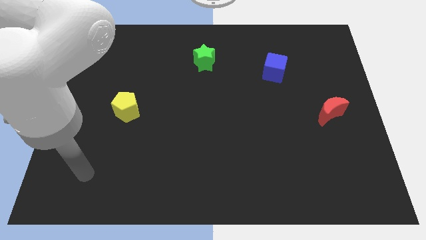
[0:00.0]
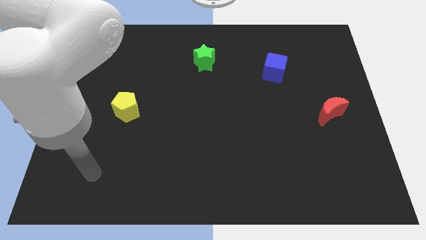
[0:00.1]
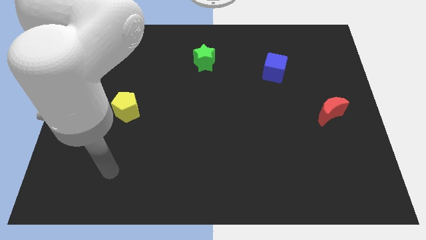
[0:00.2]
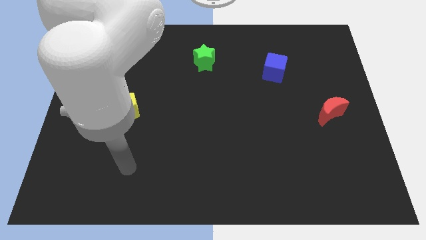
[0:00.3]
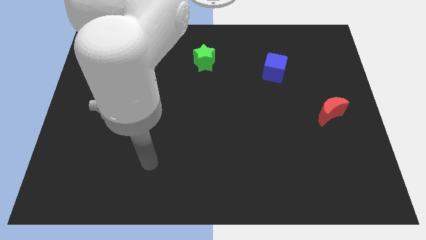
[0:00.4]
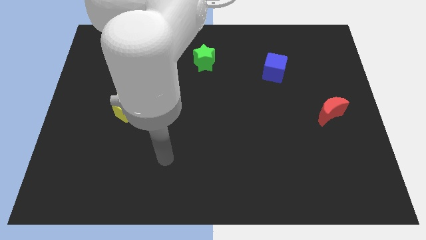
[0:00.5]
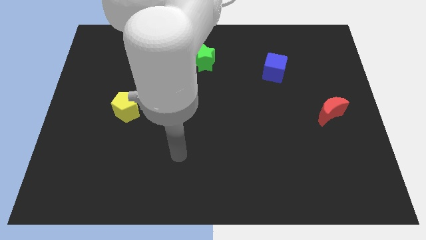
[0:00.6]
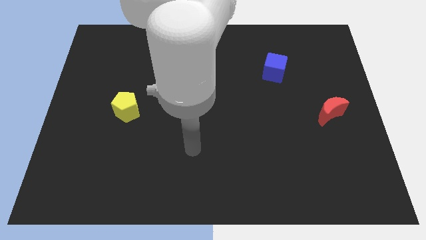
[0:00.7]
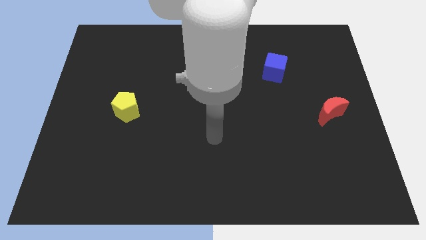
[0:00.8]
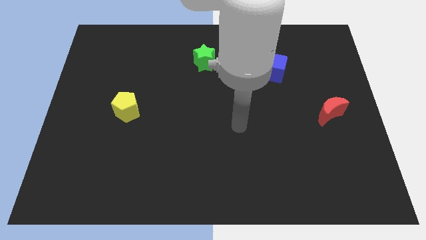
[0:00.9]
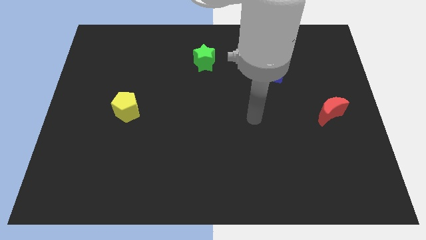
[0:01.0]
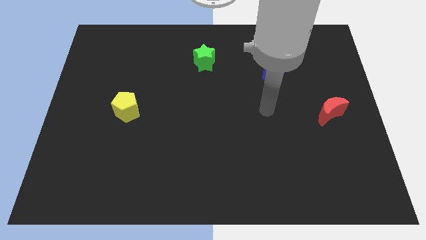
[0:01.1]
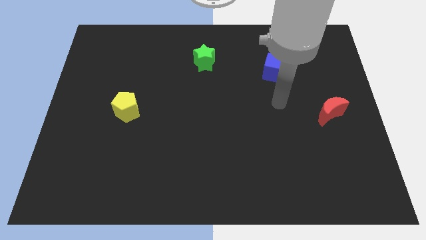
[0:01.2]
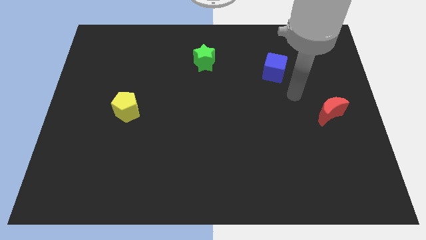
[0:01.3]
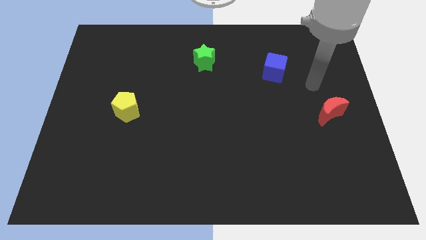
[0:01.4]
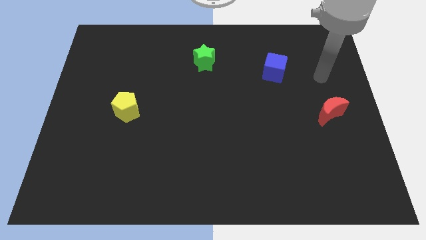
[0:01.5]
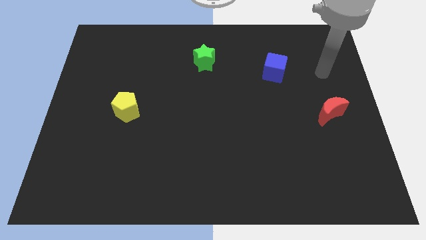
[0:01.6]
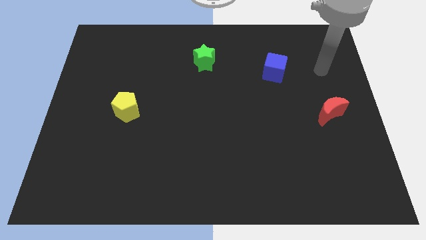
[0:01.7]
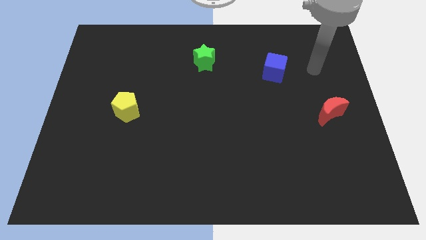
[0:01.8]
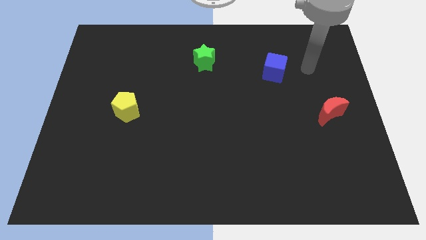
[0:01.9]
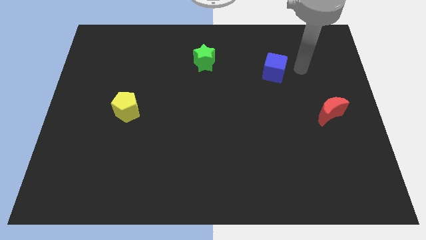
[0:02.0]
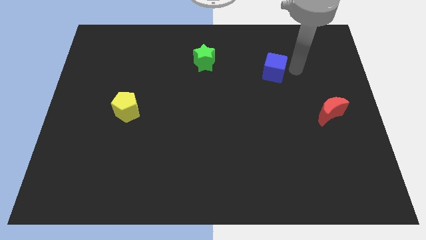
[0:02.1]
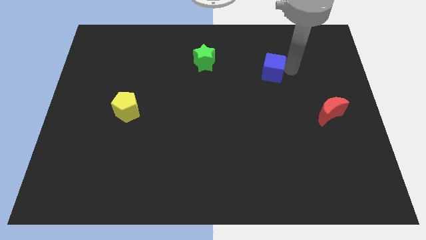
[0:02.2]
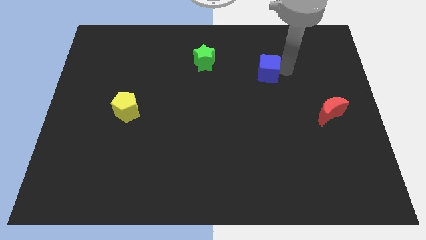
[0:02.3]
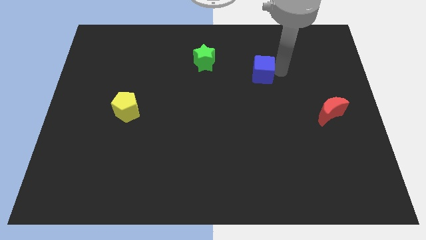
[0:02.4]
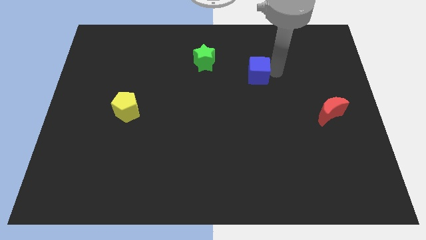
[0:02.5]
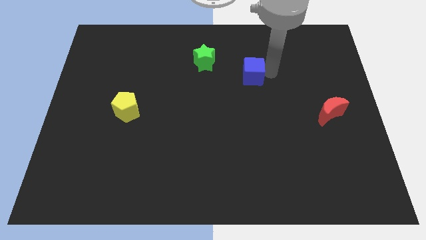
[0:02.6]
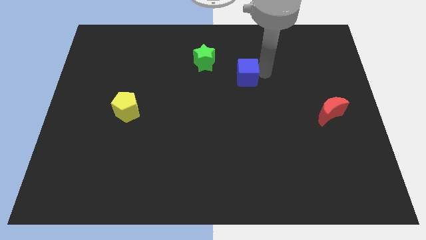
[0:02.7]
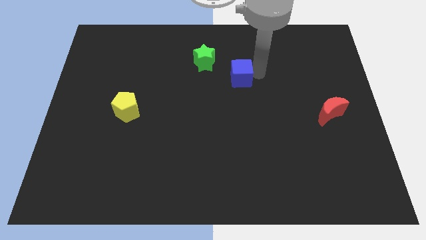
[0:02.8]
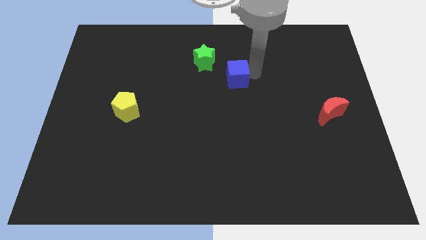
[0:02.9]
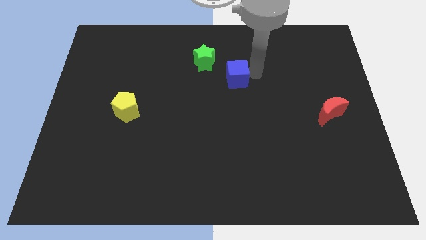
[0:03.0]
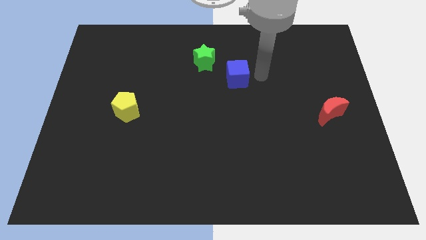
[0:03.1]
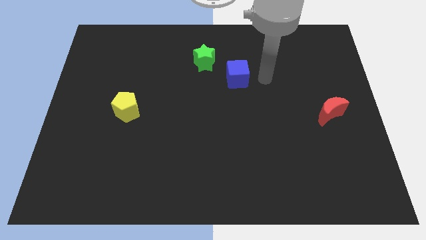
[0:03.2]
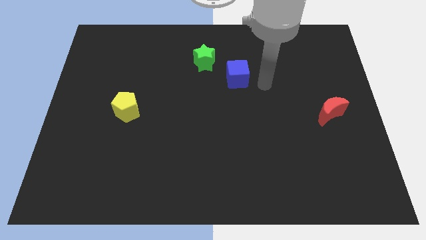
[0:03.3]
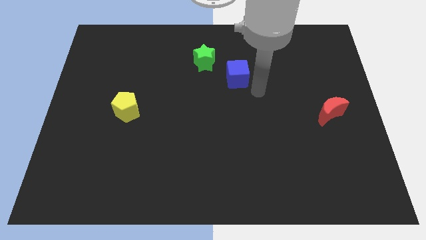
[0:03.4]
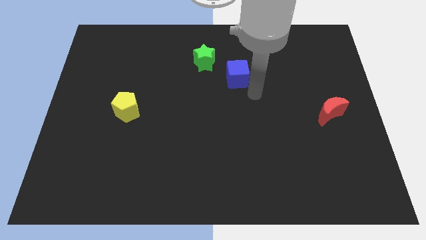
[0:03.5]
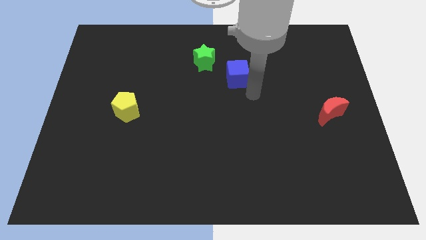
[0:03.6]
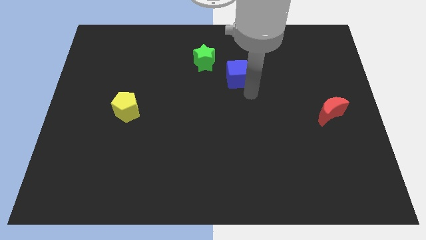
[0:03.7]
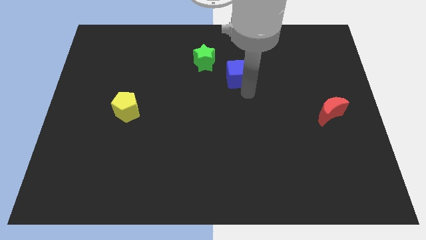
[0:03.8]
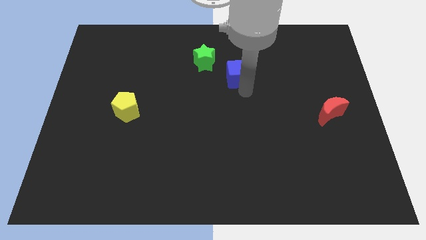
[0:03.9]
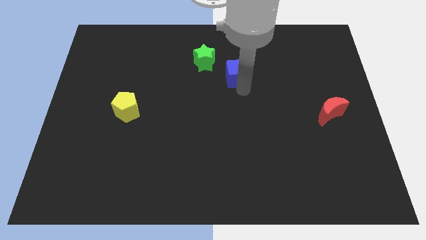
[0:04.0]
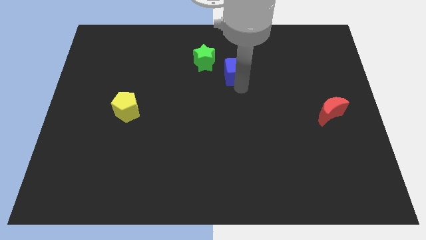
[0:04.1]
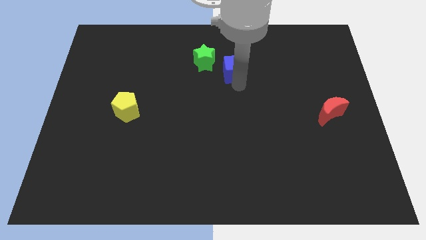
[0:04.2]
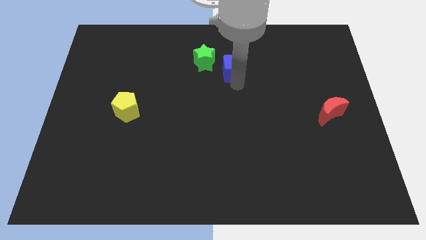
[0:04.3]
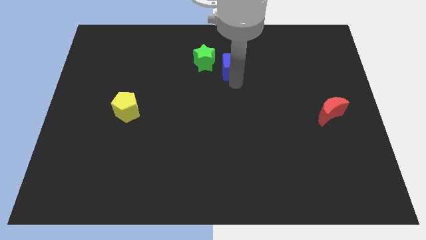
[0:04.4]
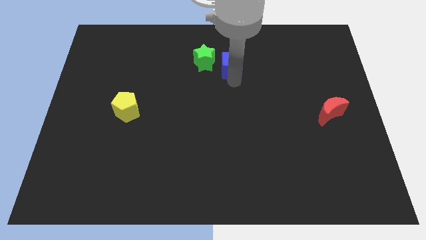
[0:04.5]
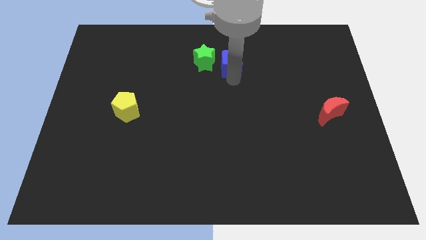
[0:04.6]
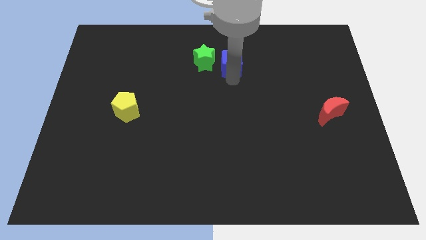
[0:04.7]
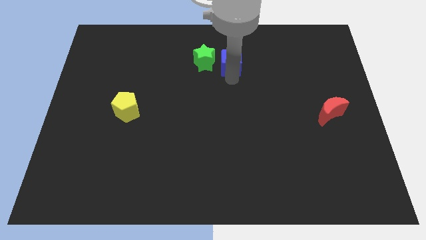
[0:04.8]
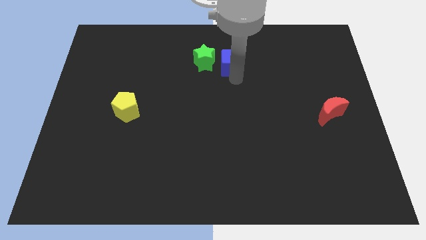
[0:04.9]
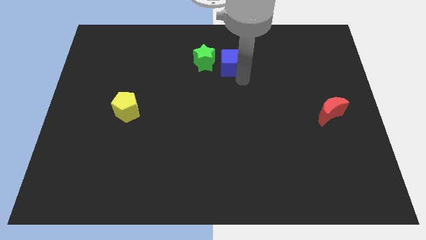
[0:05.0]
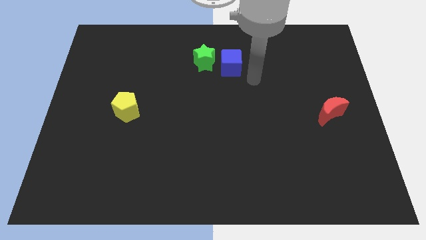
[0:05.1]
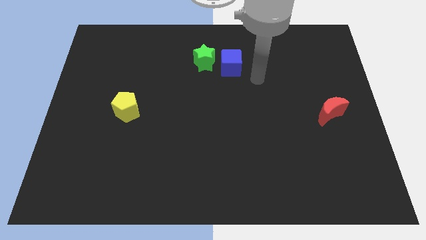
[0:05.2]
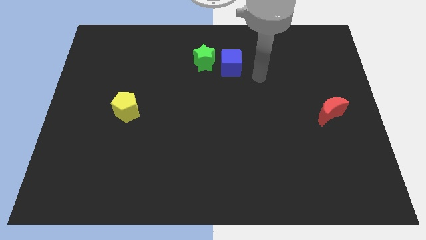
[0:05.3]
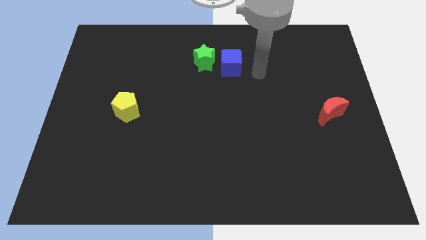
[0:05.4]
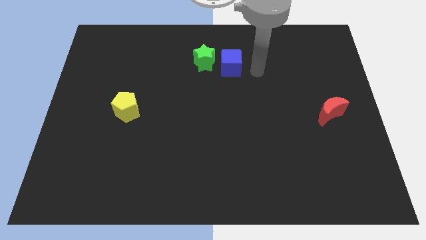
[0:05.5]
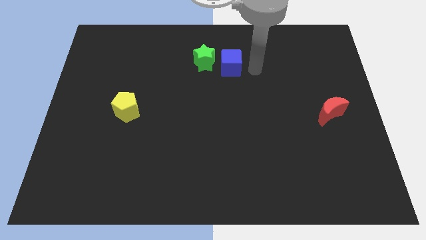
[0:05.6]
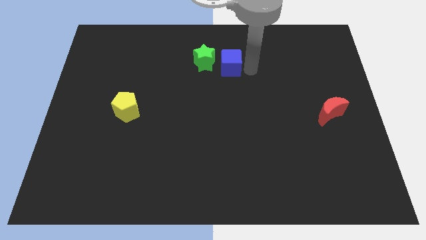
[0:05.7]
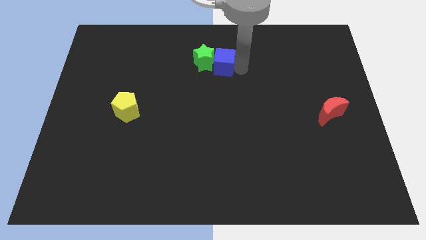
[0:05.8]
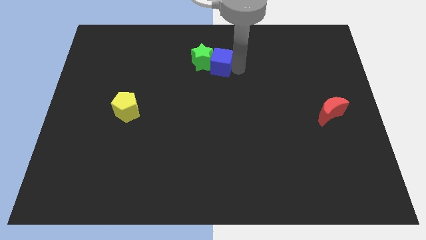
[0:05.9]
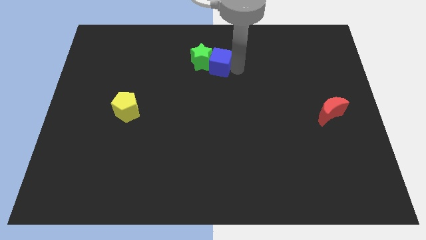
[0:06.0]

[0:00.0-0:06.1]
slide the blue cube towards the star

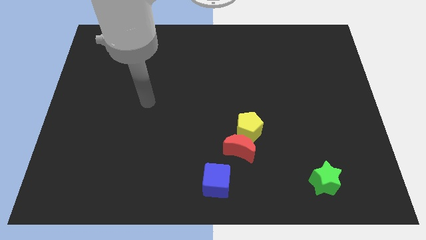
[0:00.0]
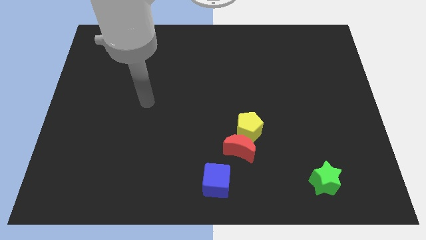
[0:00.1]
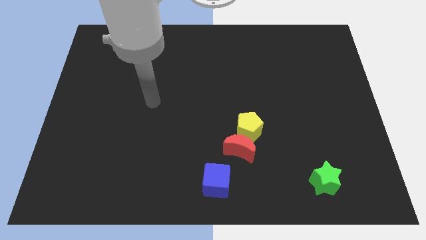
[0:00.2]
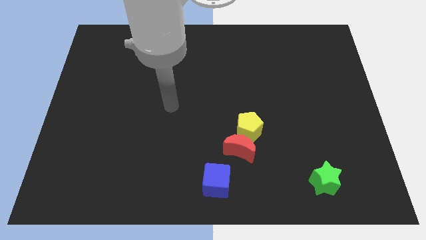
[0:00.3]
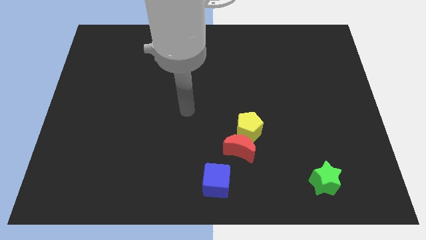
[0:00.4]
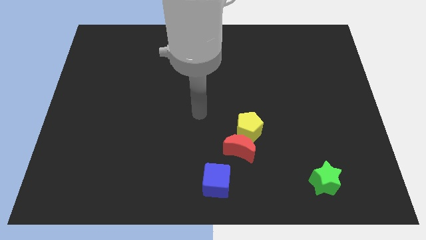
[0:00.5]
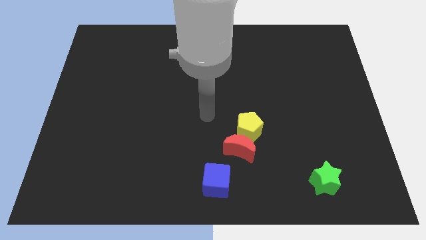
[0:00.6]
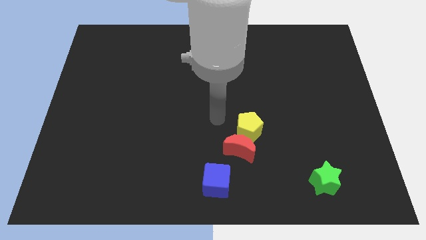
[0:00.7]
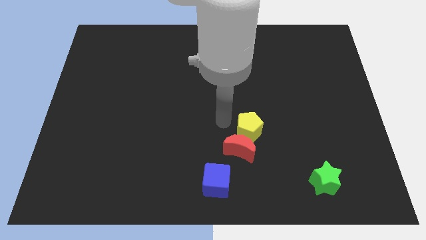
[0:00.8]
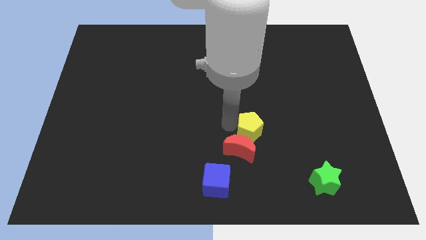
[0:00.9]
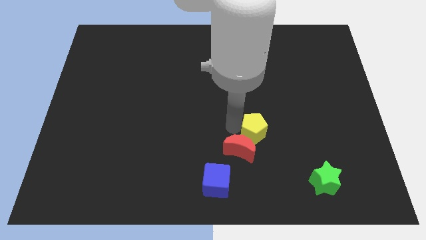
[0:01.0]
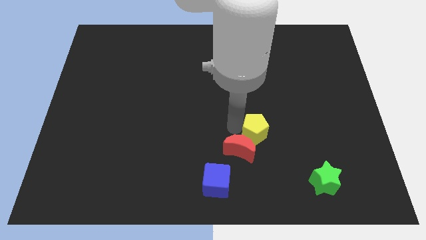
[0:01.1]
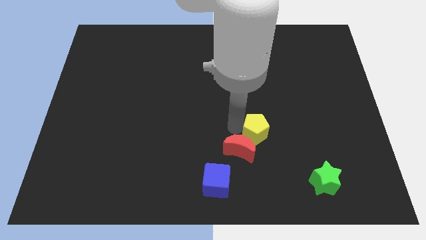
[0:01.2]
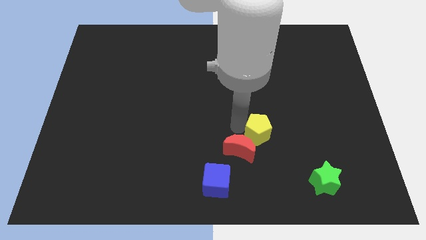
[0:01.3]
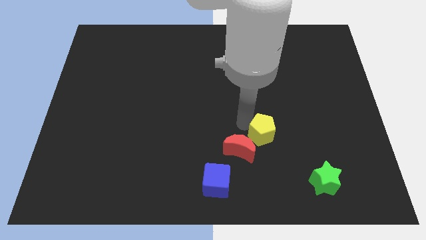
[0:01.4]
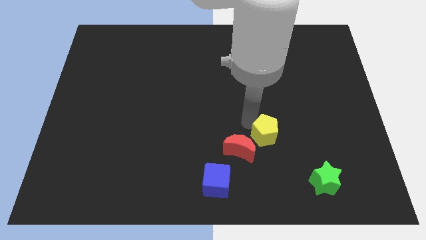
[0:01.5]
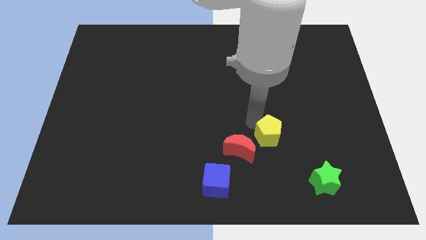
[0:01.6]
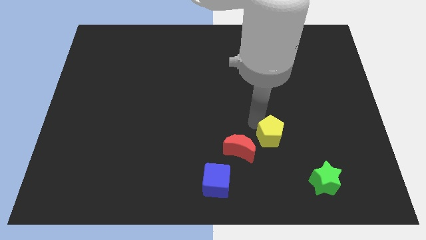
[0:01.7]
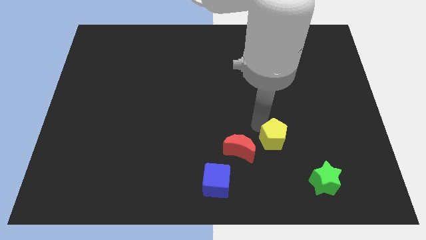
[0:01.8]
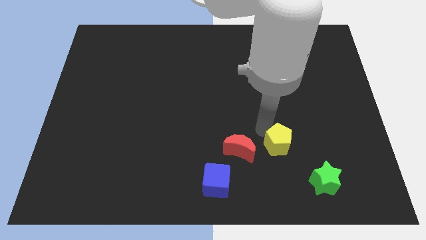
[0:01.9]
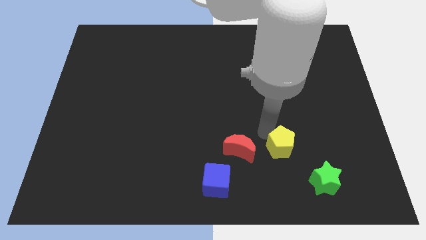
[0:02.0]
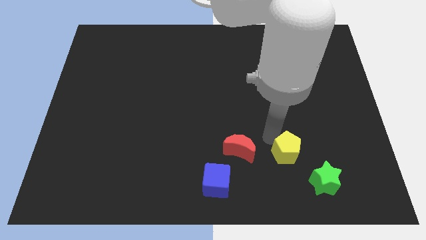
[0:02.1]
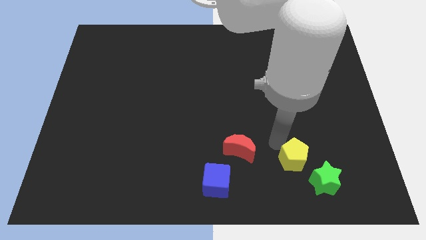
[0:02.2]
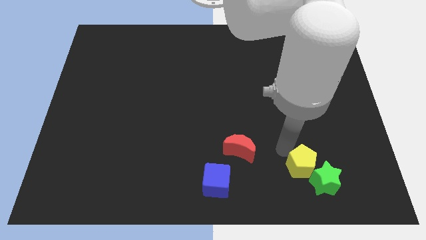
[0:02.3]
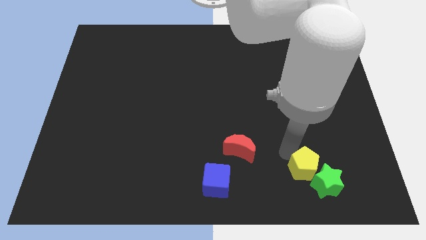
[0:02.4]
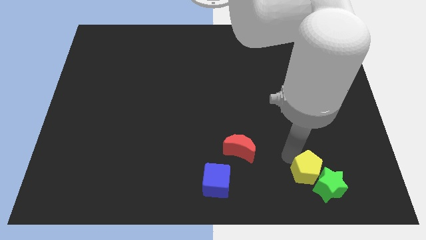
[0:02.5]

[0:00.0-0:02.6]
slide the pentagon to the green star
